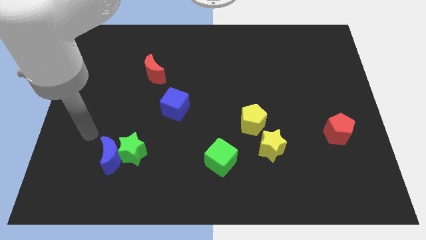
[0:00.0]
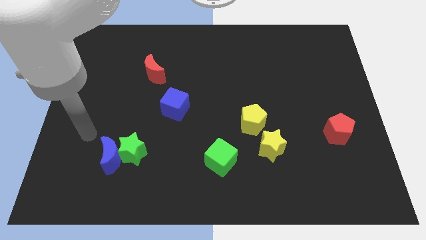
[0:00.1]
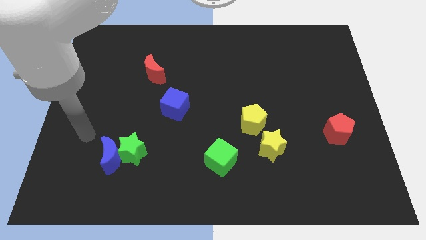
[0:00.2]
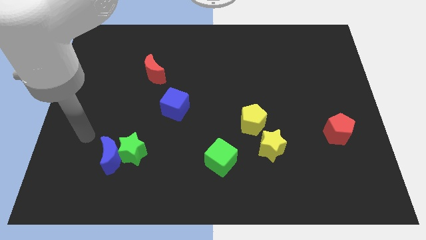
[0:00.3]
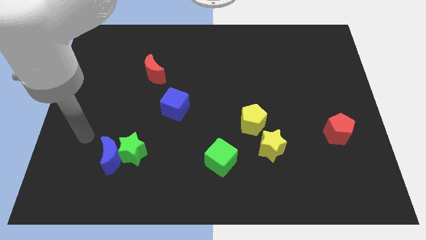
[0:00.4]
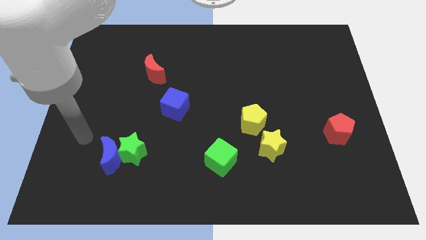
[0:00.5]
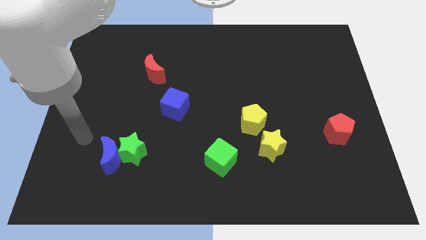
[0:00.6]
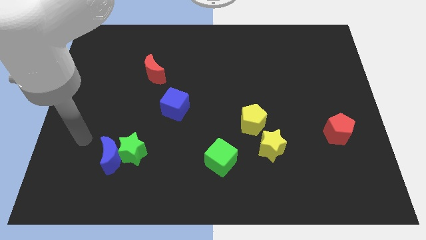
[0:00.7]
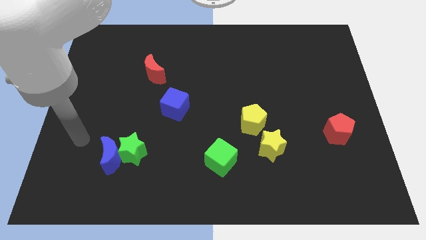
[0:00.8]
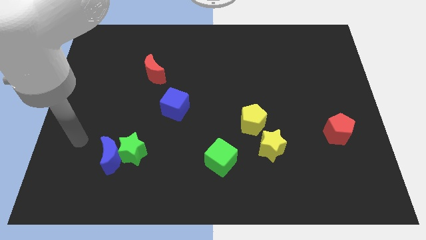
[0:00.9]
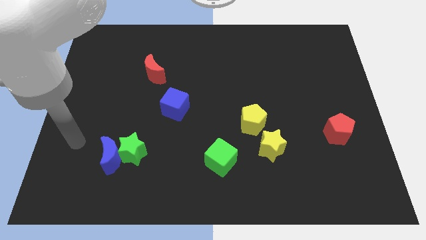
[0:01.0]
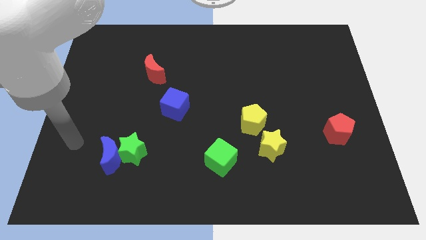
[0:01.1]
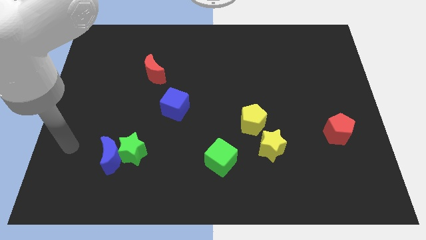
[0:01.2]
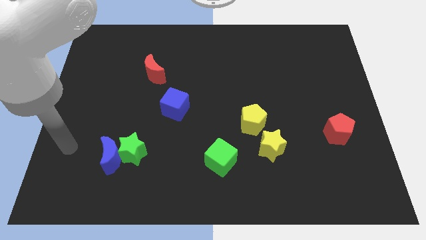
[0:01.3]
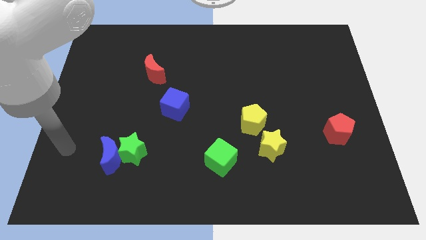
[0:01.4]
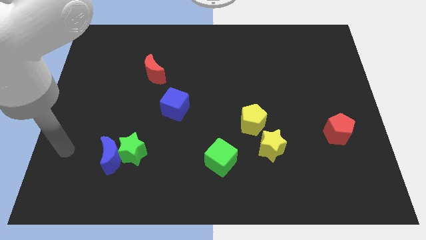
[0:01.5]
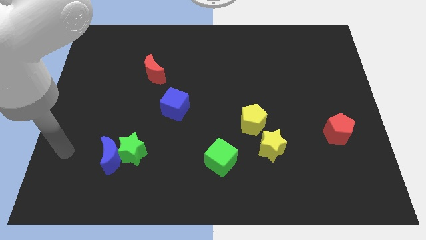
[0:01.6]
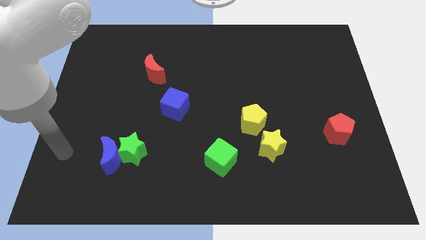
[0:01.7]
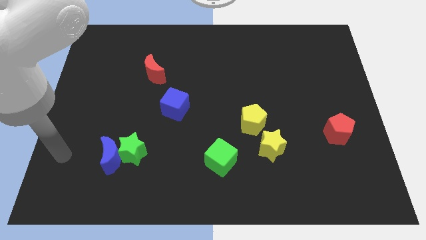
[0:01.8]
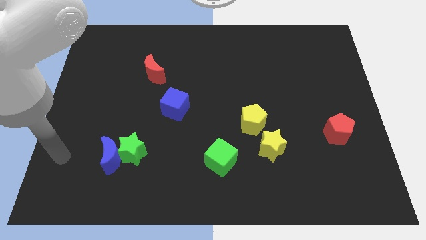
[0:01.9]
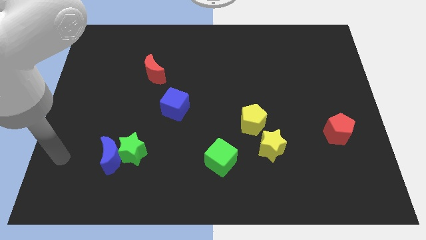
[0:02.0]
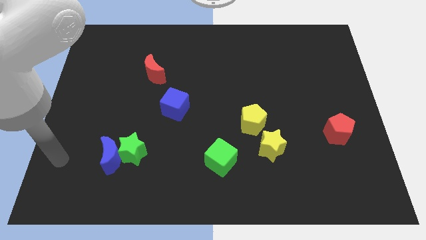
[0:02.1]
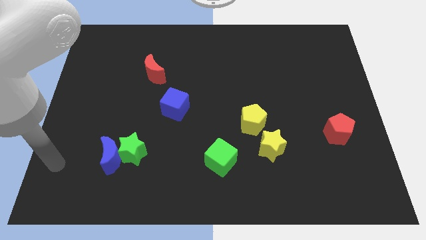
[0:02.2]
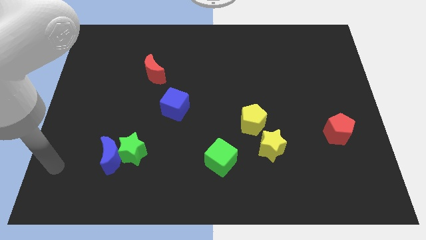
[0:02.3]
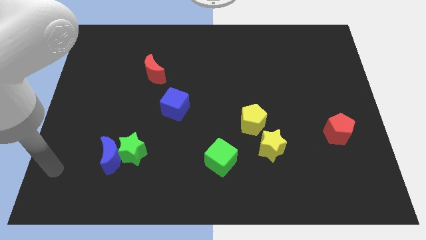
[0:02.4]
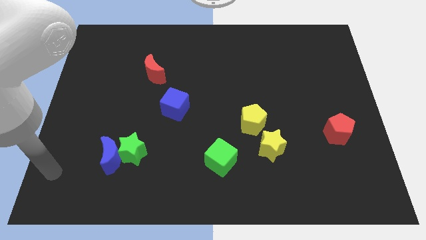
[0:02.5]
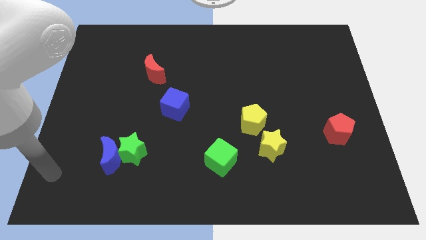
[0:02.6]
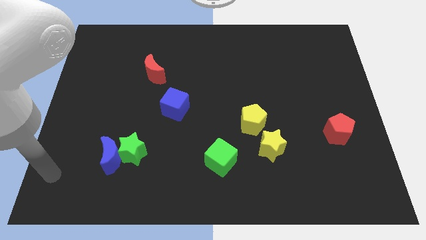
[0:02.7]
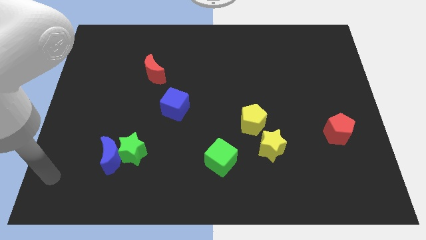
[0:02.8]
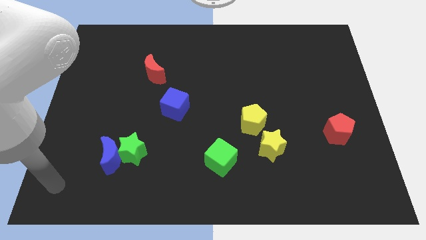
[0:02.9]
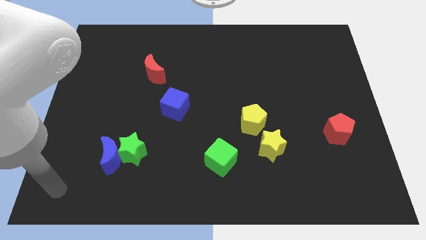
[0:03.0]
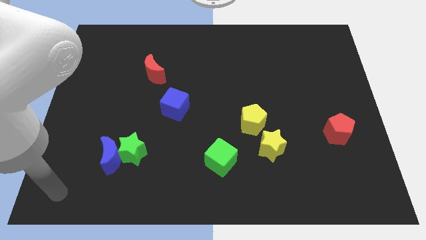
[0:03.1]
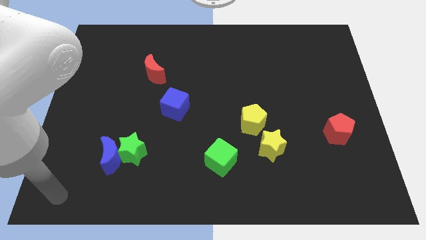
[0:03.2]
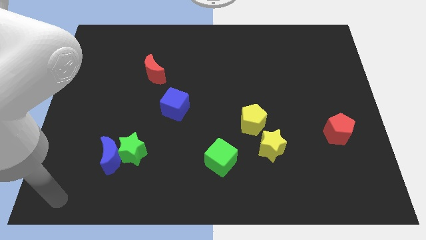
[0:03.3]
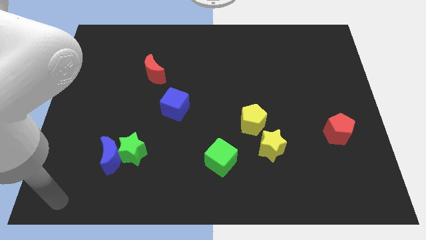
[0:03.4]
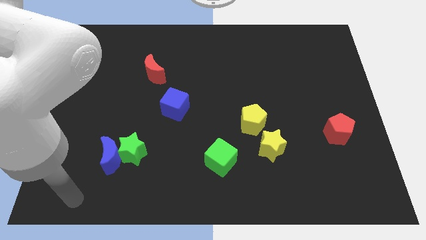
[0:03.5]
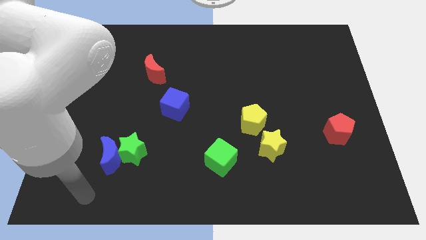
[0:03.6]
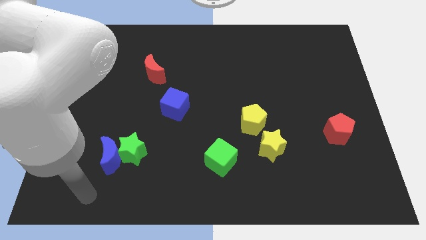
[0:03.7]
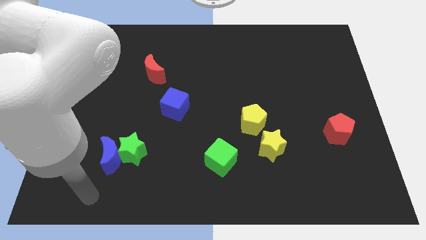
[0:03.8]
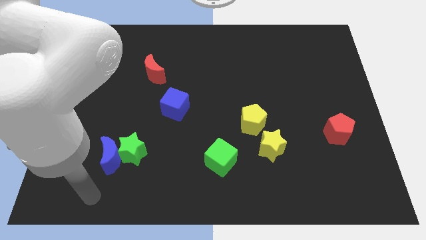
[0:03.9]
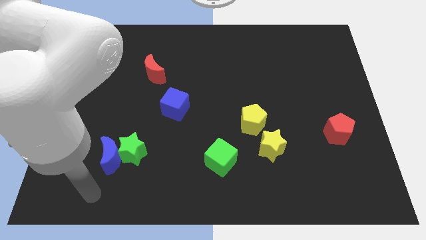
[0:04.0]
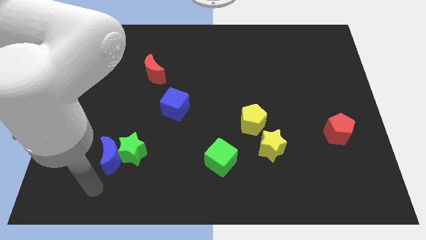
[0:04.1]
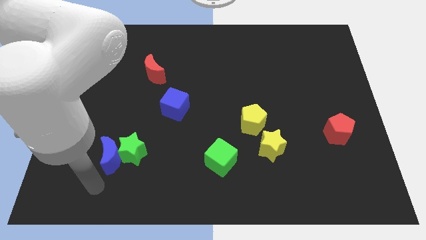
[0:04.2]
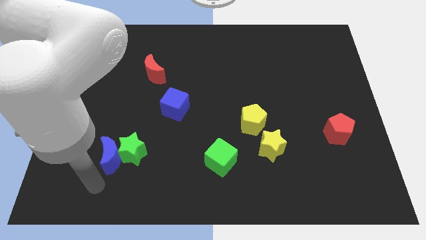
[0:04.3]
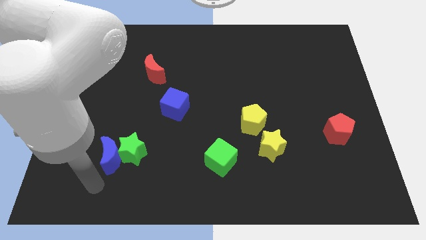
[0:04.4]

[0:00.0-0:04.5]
push your arm at the bottom of the blue moon

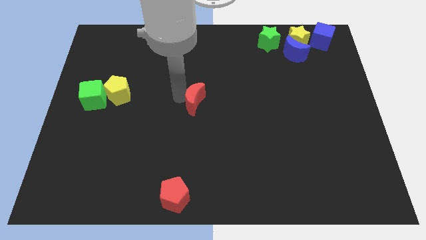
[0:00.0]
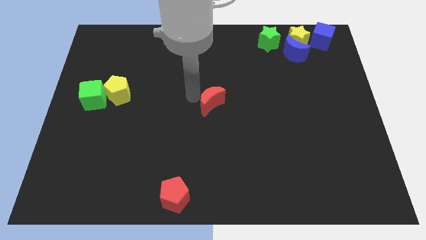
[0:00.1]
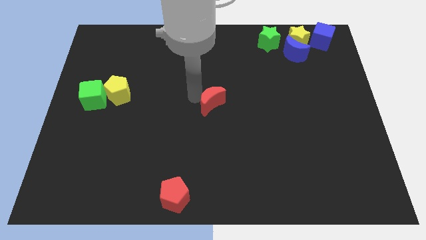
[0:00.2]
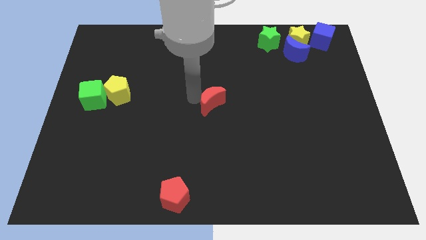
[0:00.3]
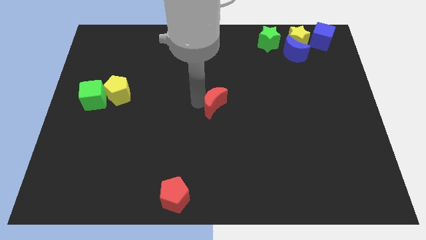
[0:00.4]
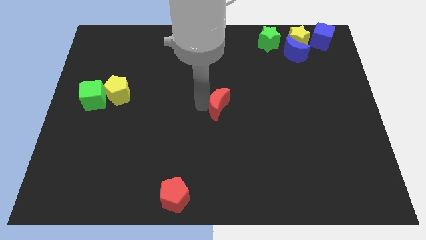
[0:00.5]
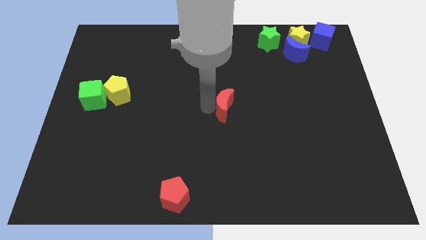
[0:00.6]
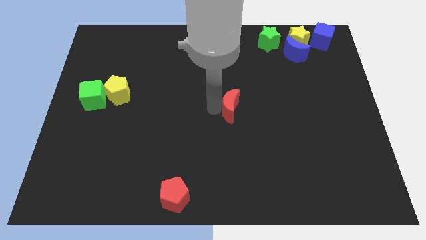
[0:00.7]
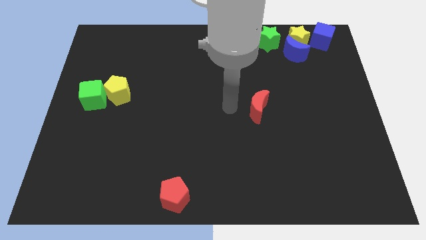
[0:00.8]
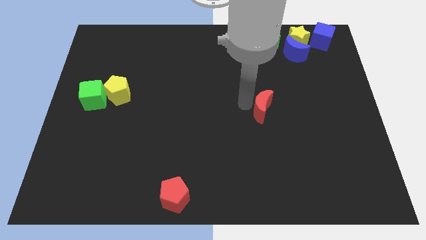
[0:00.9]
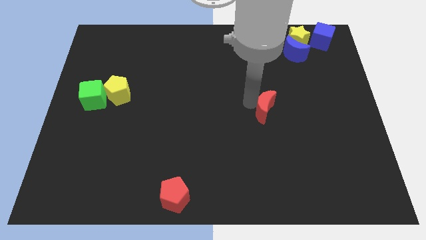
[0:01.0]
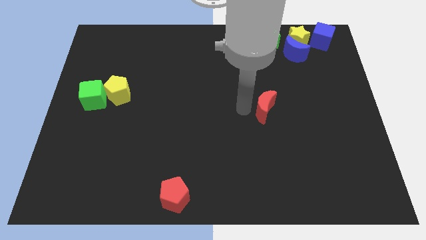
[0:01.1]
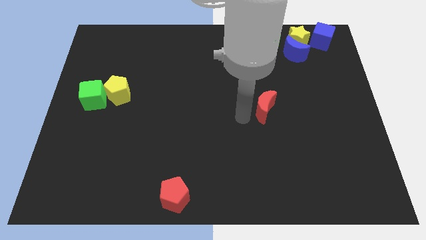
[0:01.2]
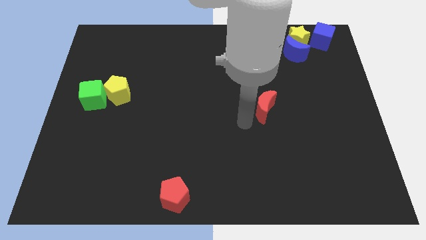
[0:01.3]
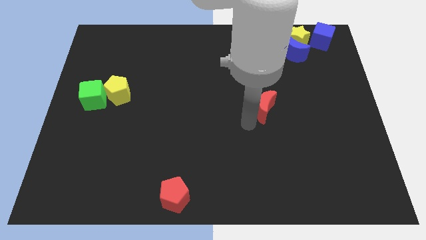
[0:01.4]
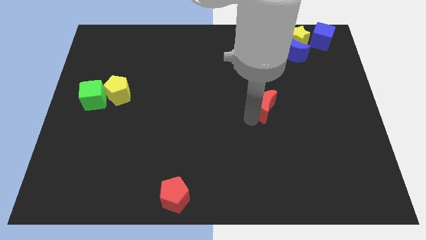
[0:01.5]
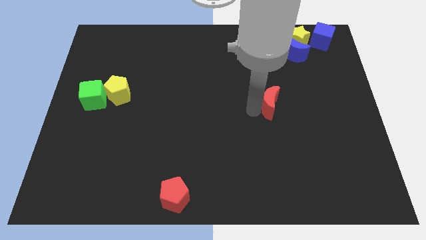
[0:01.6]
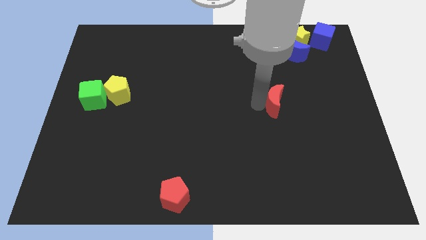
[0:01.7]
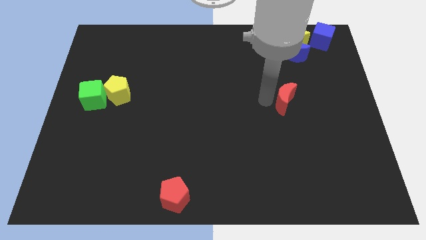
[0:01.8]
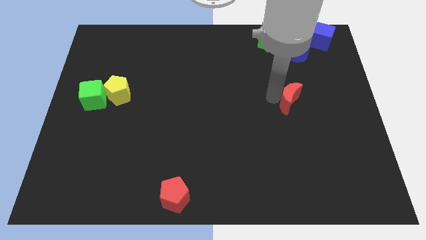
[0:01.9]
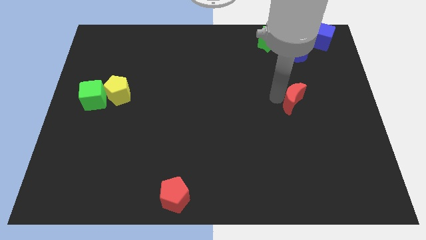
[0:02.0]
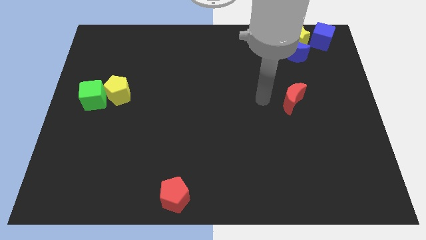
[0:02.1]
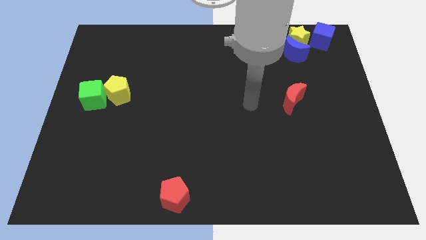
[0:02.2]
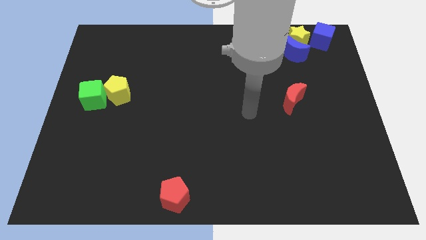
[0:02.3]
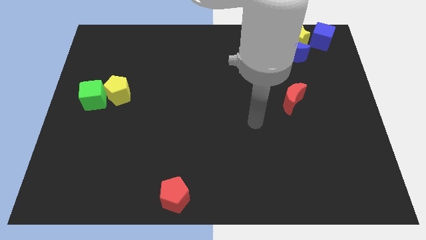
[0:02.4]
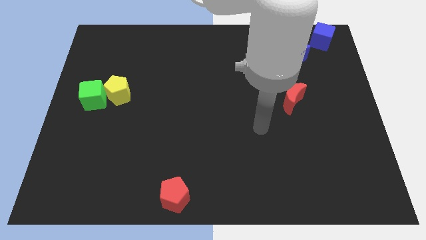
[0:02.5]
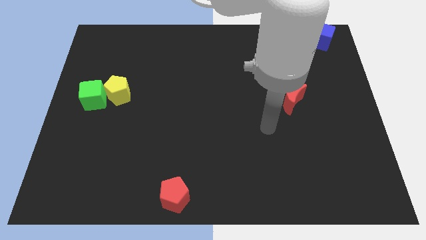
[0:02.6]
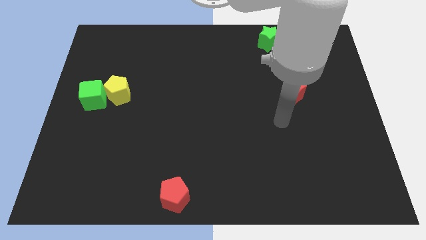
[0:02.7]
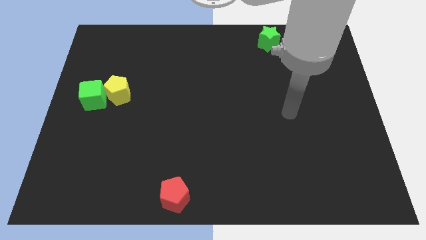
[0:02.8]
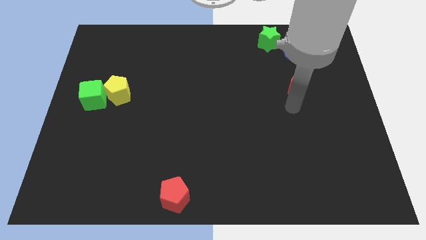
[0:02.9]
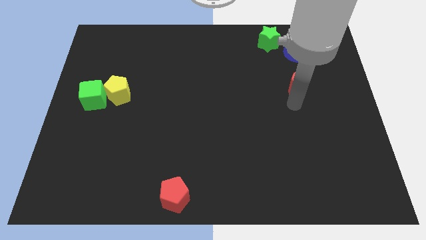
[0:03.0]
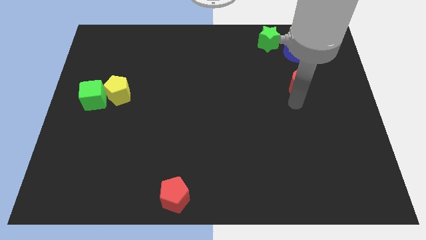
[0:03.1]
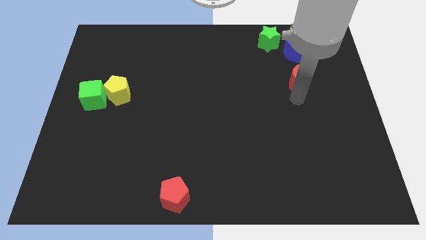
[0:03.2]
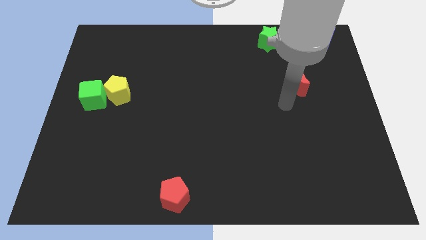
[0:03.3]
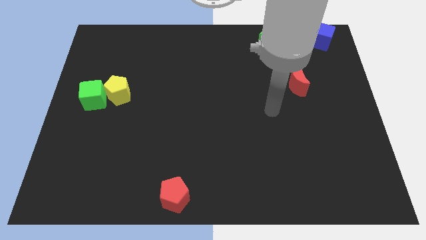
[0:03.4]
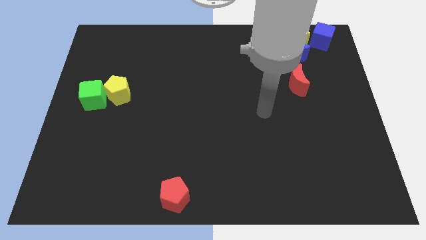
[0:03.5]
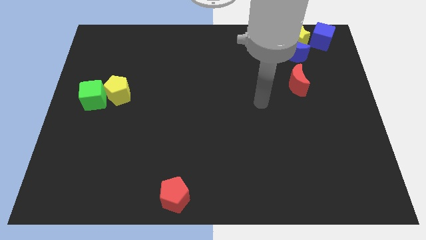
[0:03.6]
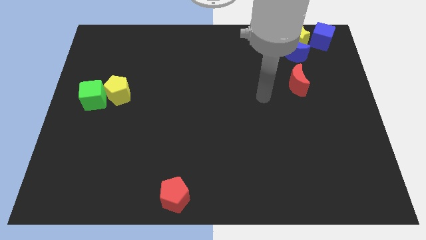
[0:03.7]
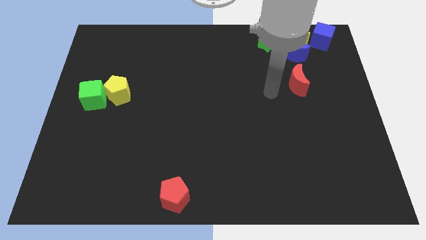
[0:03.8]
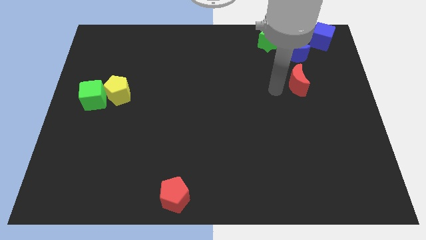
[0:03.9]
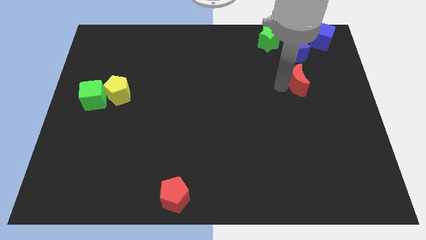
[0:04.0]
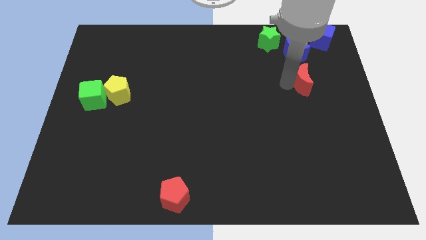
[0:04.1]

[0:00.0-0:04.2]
place the red moon below the blue moon

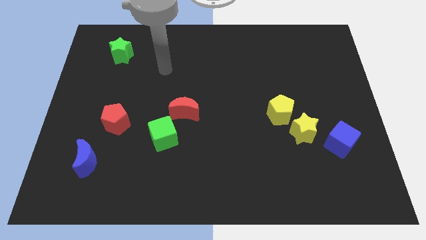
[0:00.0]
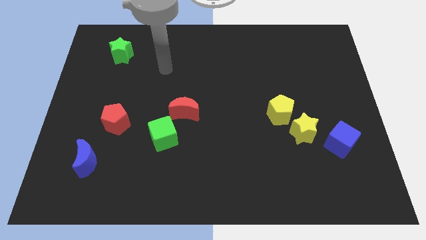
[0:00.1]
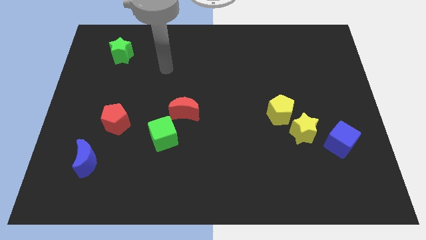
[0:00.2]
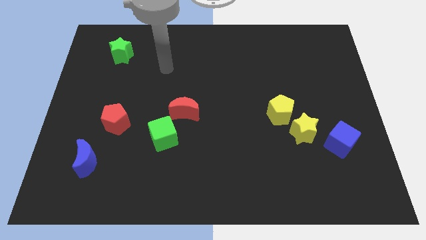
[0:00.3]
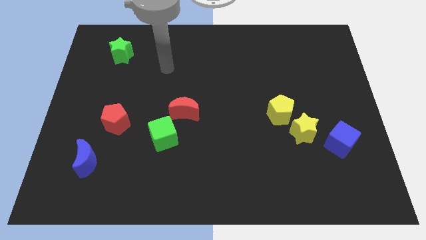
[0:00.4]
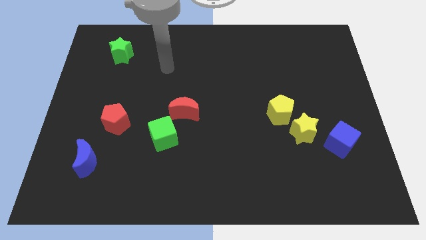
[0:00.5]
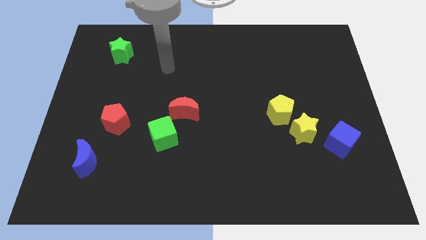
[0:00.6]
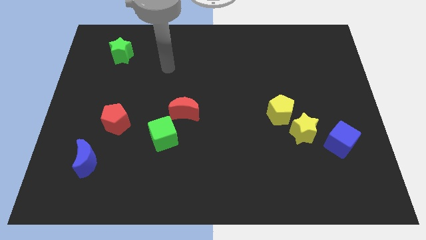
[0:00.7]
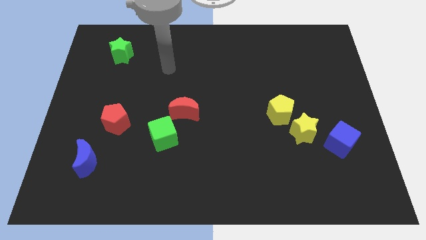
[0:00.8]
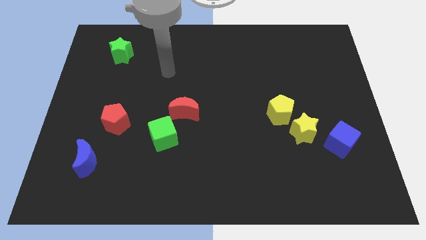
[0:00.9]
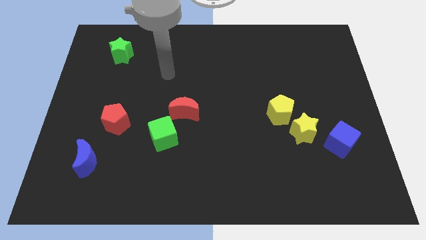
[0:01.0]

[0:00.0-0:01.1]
slightly move arm to the right
